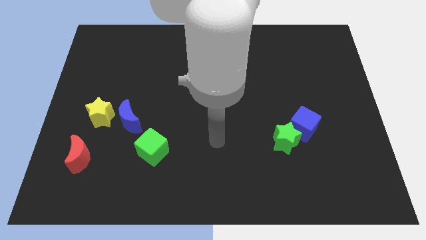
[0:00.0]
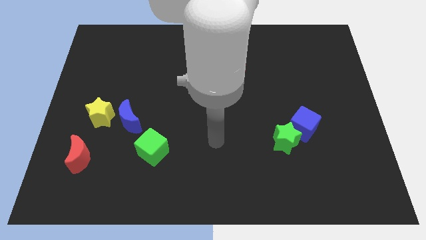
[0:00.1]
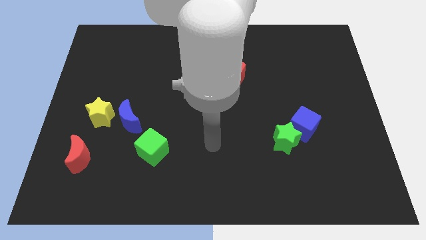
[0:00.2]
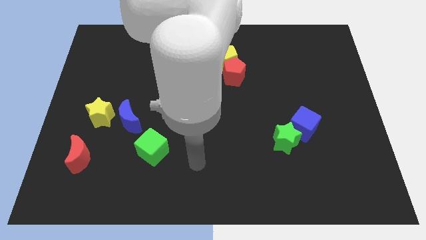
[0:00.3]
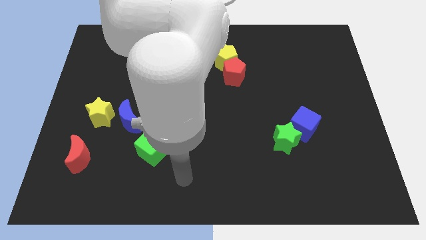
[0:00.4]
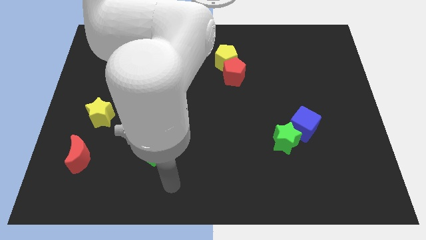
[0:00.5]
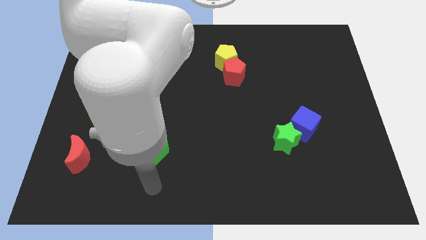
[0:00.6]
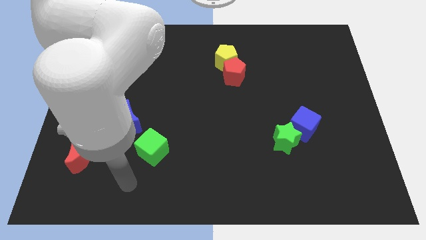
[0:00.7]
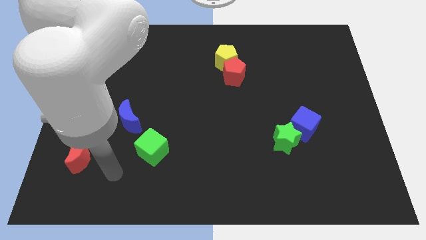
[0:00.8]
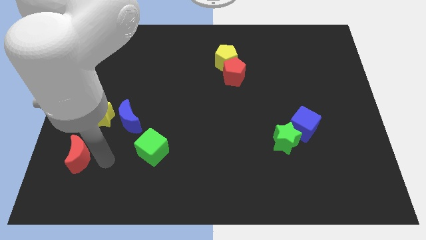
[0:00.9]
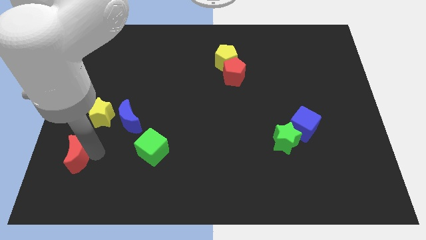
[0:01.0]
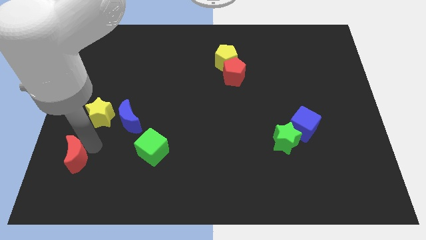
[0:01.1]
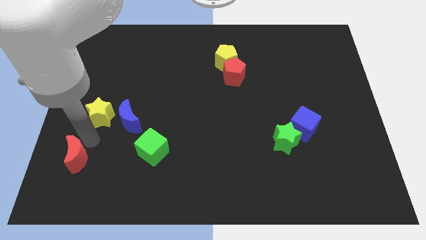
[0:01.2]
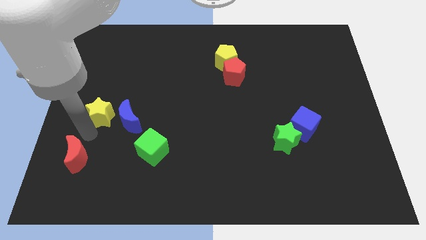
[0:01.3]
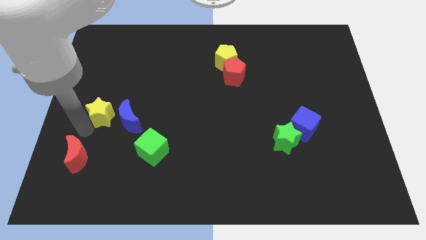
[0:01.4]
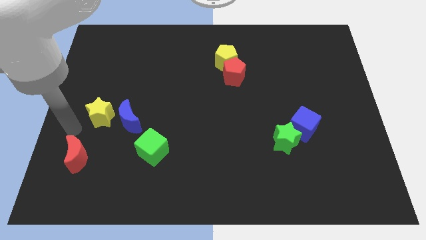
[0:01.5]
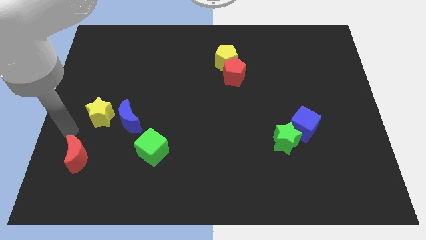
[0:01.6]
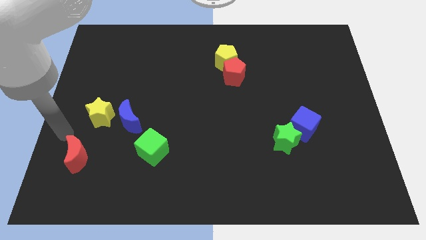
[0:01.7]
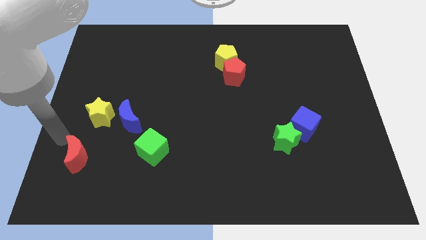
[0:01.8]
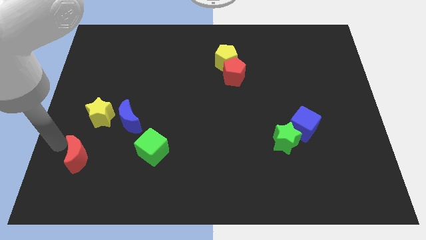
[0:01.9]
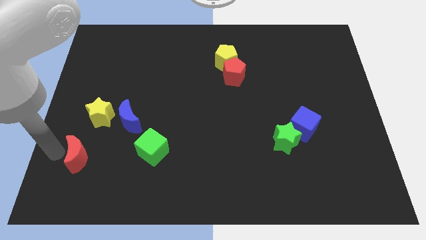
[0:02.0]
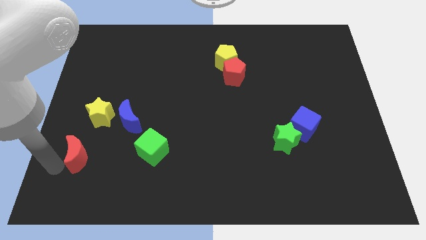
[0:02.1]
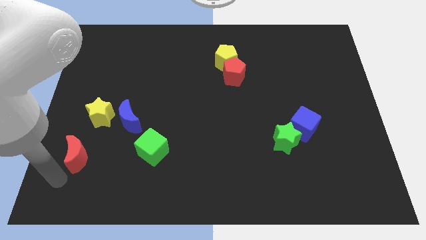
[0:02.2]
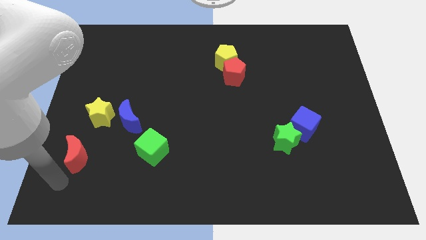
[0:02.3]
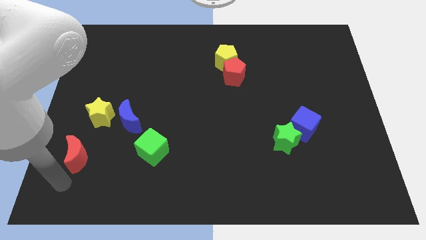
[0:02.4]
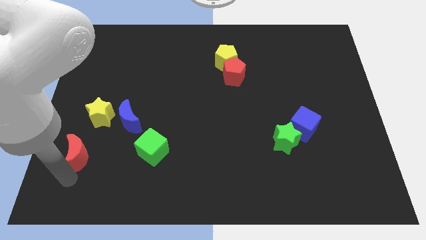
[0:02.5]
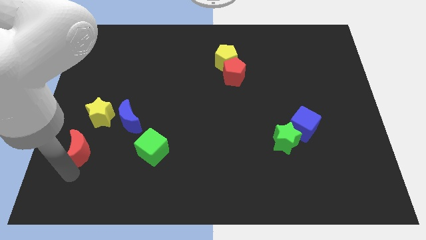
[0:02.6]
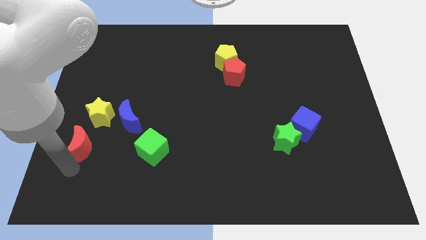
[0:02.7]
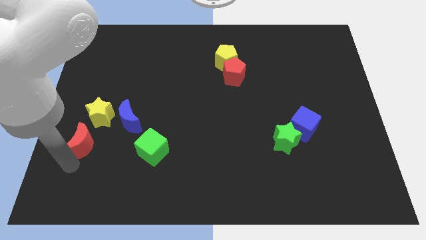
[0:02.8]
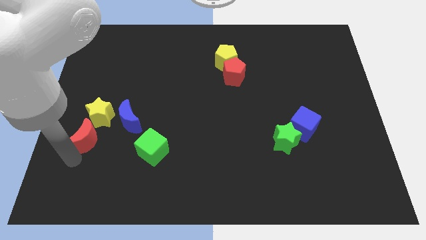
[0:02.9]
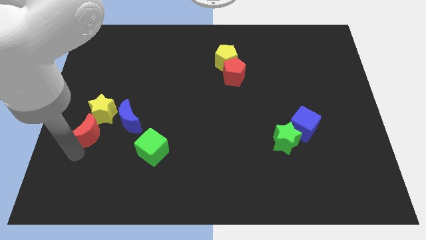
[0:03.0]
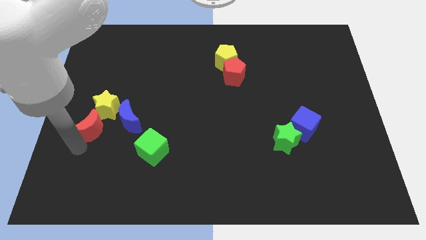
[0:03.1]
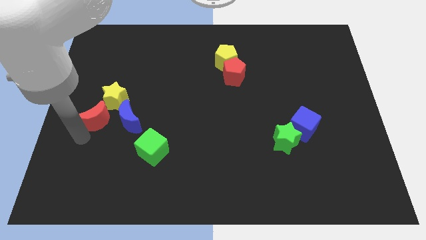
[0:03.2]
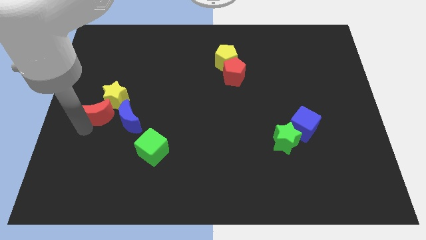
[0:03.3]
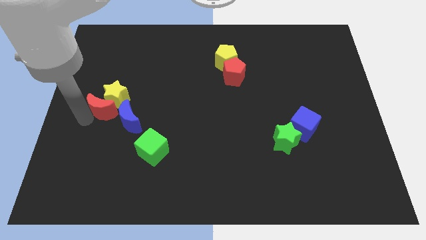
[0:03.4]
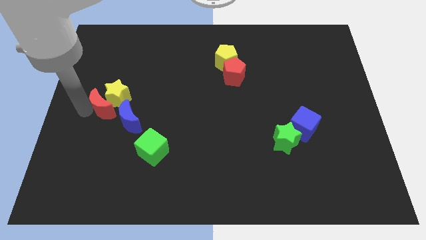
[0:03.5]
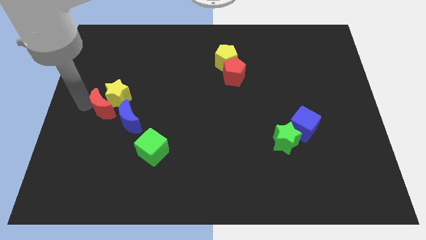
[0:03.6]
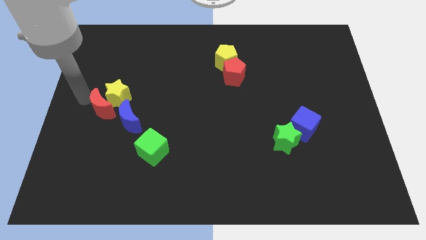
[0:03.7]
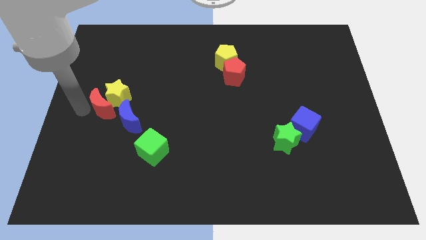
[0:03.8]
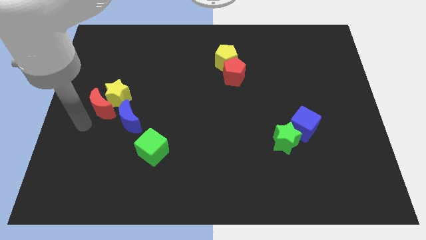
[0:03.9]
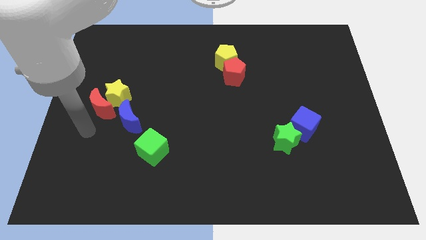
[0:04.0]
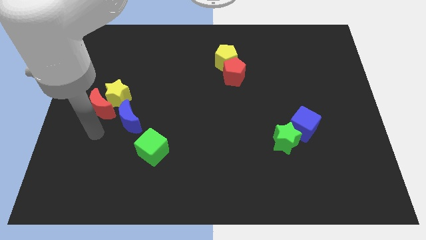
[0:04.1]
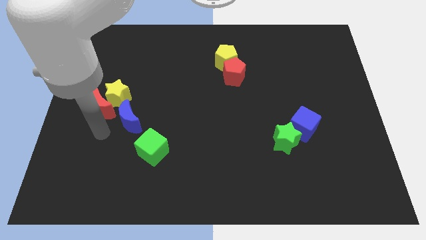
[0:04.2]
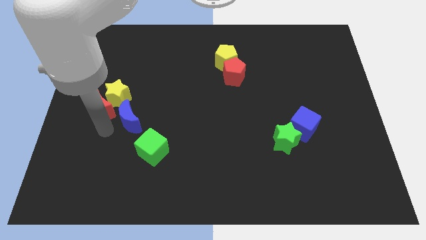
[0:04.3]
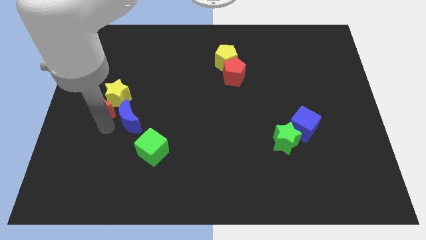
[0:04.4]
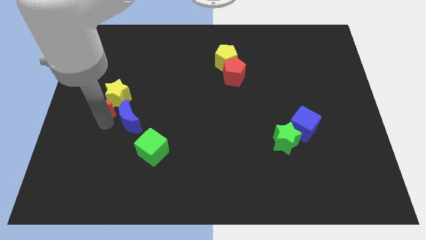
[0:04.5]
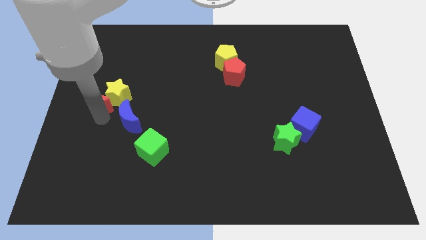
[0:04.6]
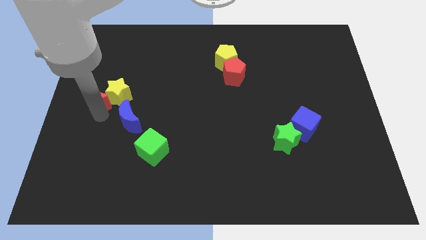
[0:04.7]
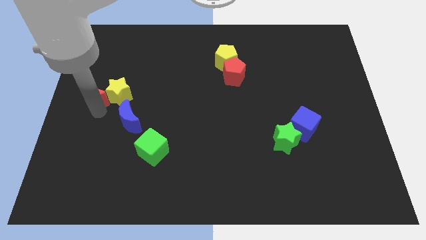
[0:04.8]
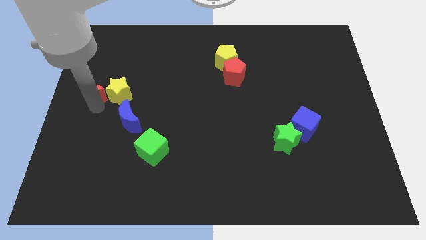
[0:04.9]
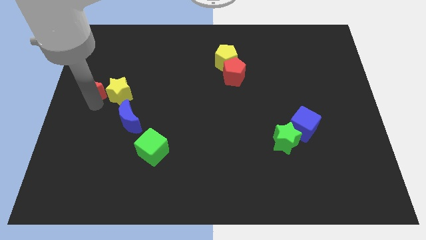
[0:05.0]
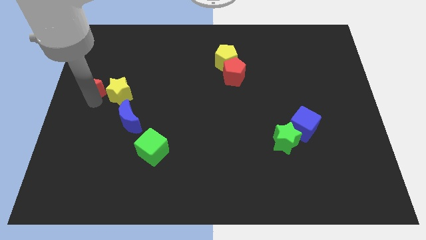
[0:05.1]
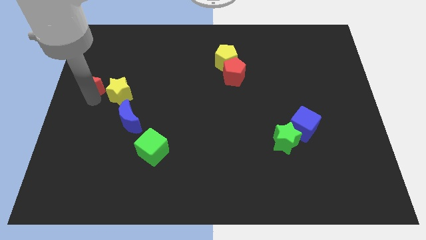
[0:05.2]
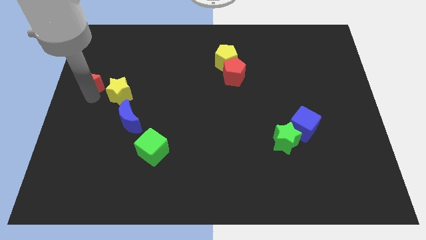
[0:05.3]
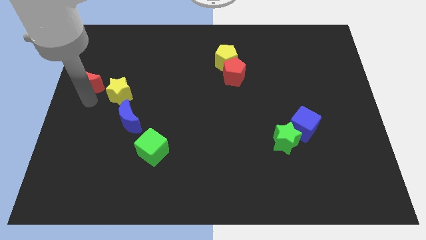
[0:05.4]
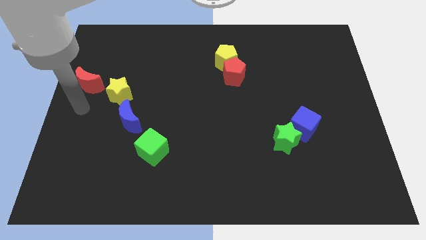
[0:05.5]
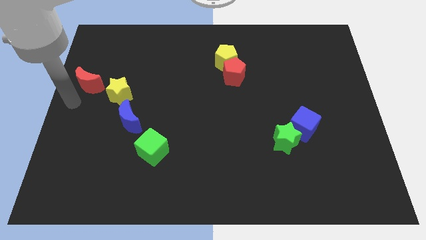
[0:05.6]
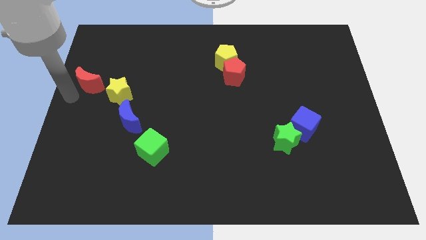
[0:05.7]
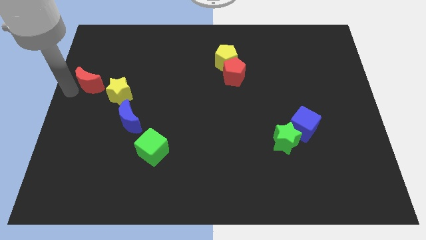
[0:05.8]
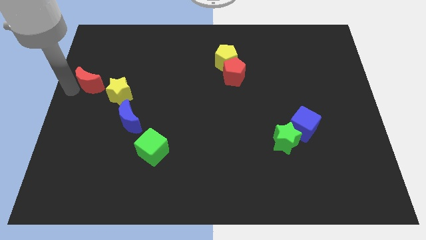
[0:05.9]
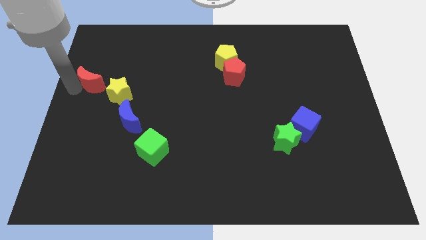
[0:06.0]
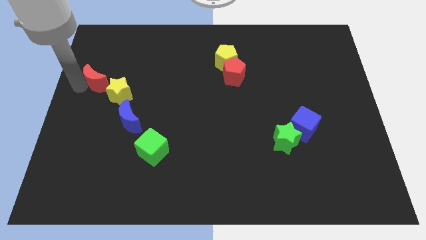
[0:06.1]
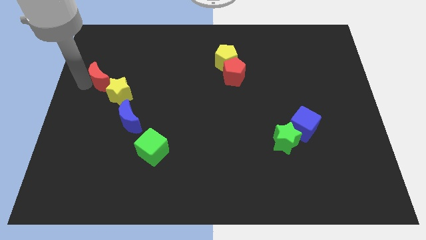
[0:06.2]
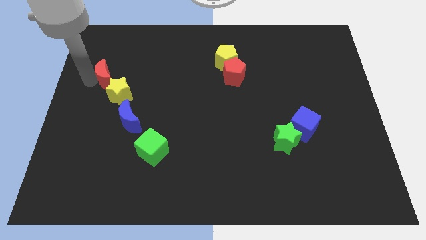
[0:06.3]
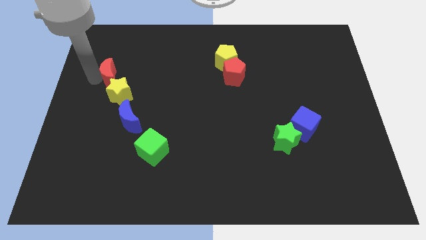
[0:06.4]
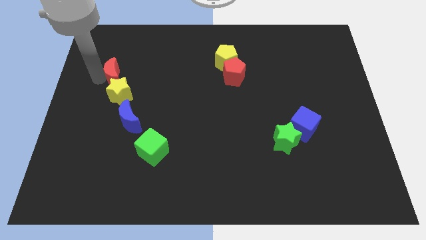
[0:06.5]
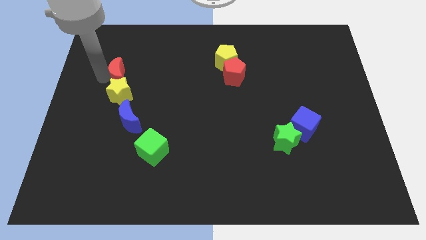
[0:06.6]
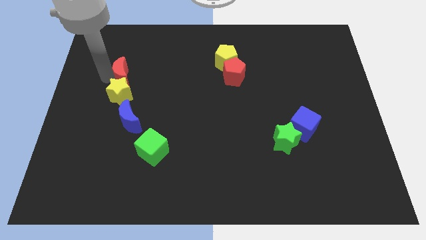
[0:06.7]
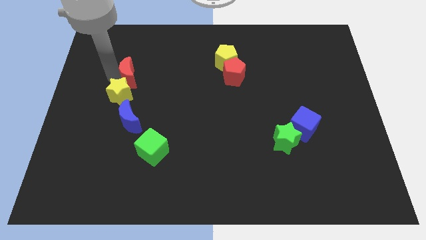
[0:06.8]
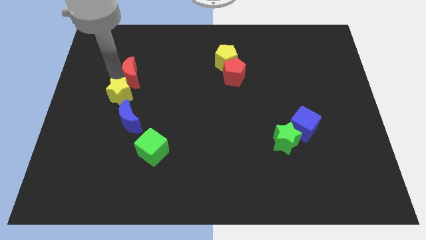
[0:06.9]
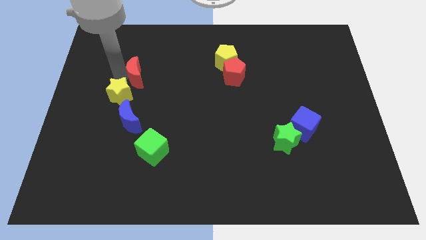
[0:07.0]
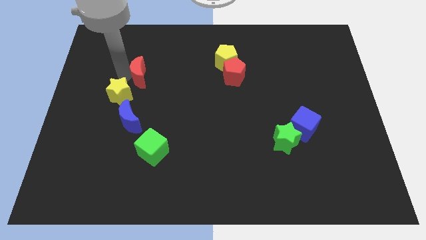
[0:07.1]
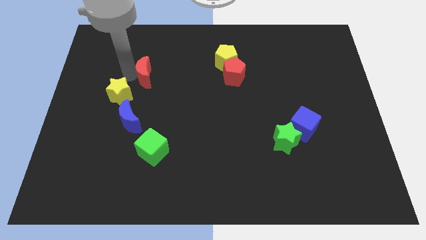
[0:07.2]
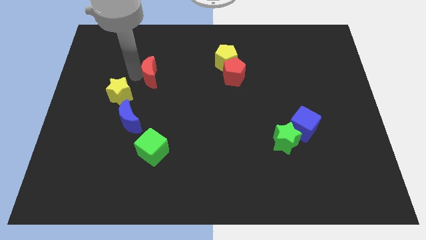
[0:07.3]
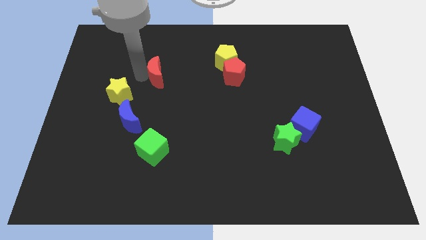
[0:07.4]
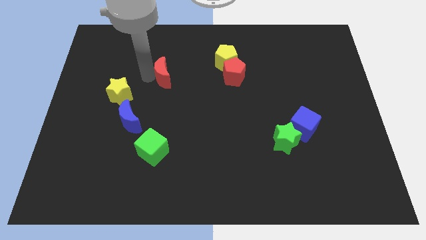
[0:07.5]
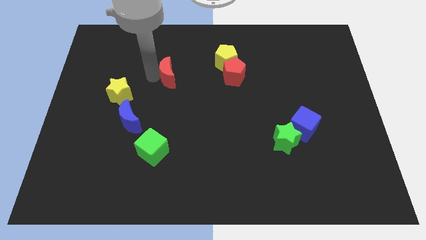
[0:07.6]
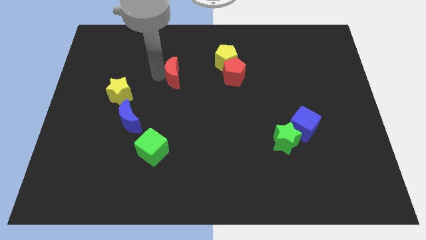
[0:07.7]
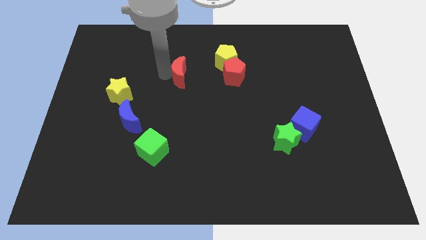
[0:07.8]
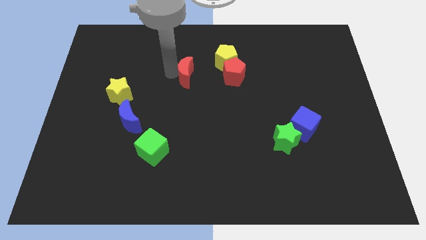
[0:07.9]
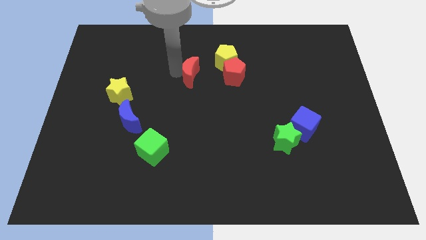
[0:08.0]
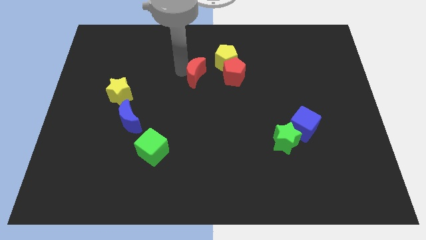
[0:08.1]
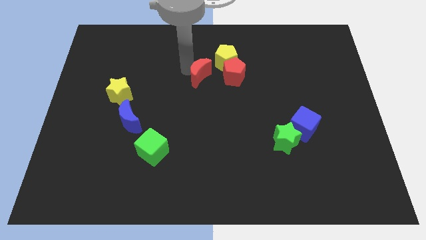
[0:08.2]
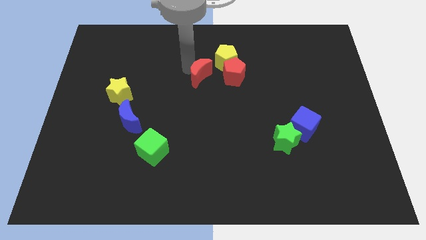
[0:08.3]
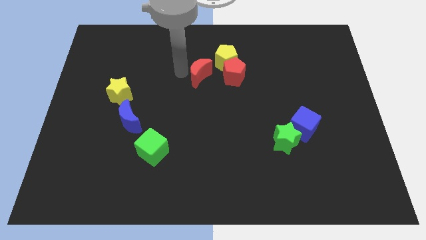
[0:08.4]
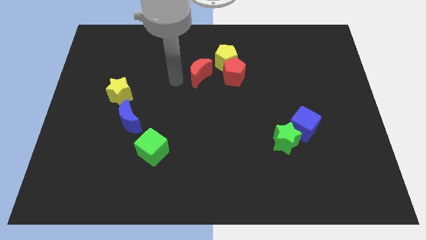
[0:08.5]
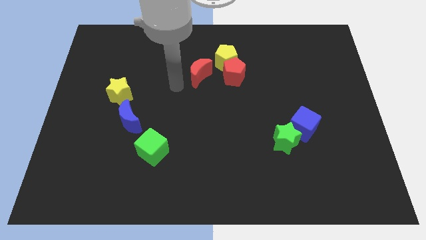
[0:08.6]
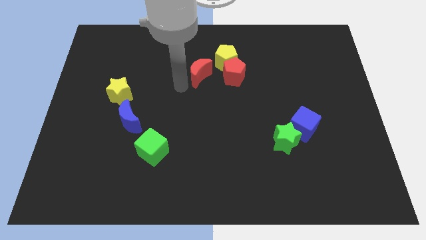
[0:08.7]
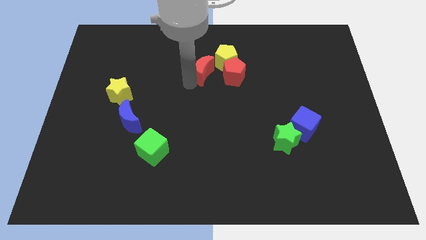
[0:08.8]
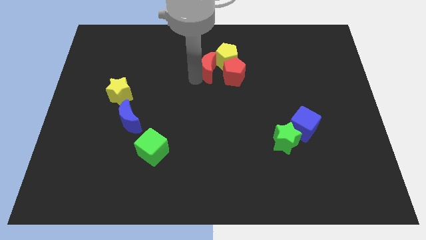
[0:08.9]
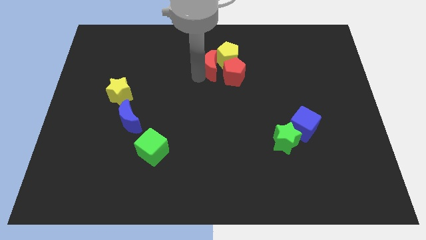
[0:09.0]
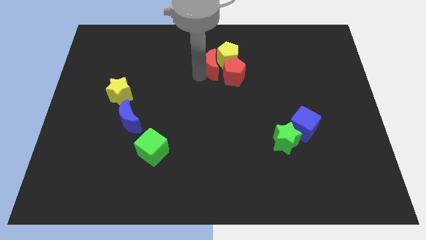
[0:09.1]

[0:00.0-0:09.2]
put the red moon towards the yellow pentagon
